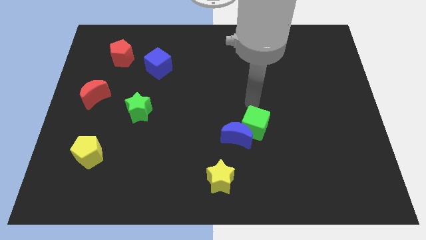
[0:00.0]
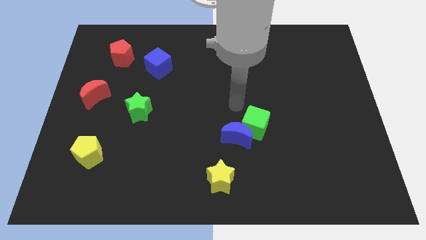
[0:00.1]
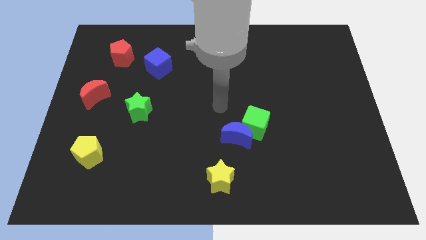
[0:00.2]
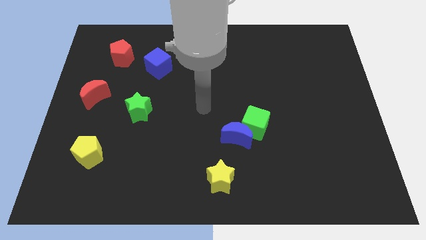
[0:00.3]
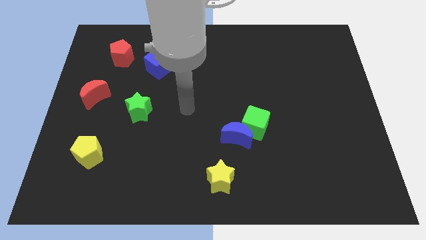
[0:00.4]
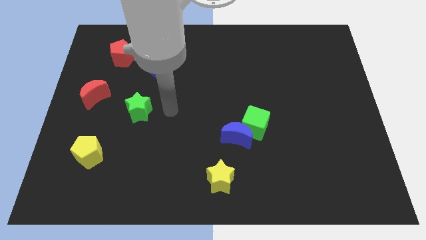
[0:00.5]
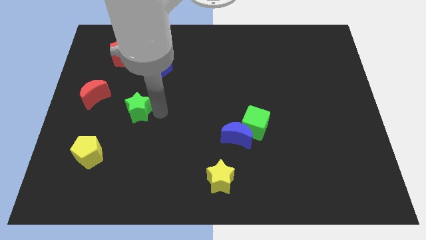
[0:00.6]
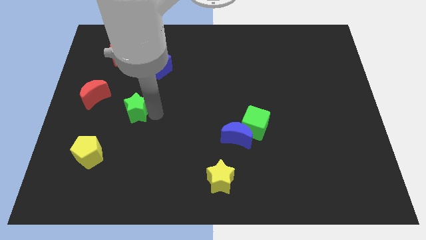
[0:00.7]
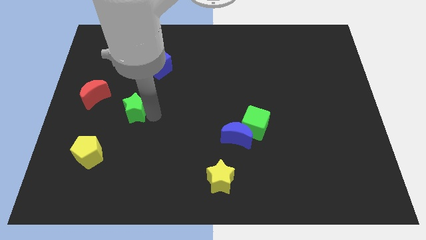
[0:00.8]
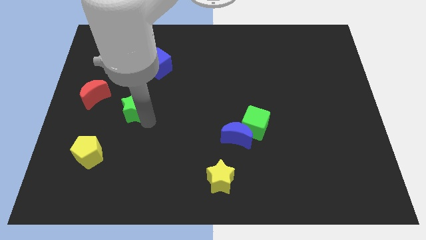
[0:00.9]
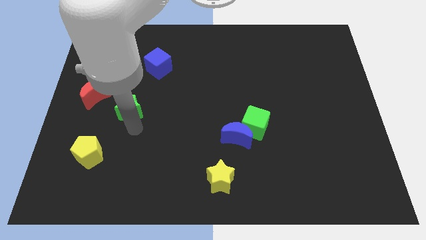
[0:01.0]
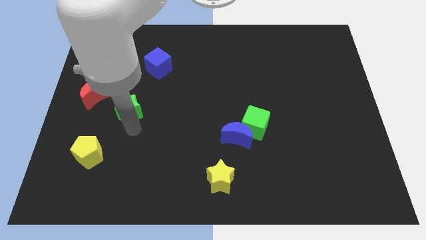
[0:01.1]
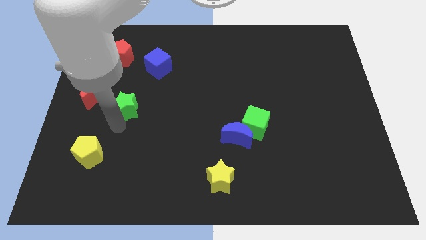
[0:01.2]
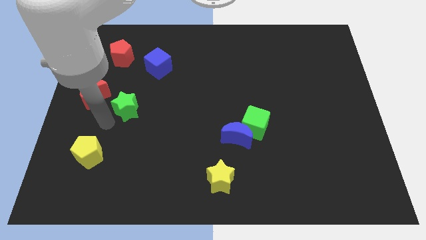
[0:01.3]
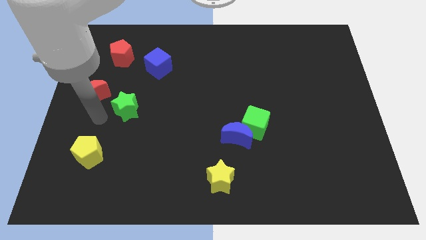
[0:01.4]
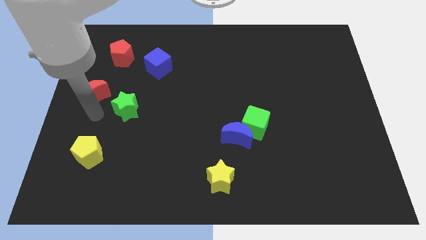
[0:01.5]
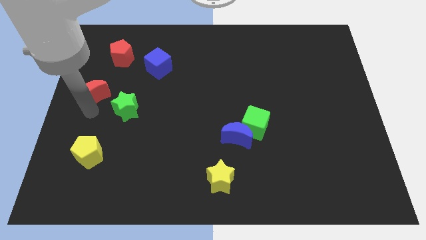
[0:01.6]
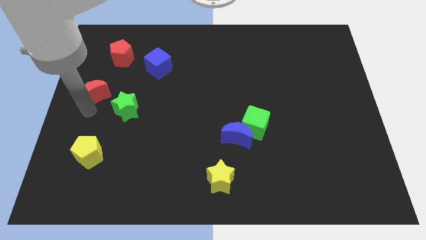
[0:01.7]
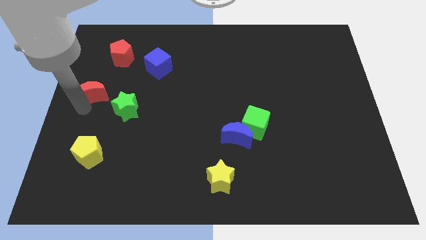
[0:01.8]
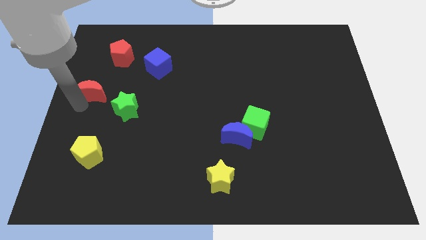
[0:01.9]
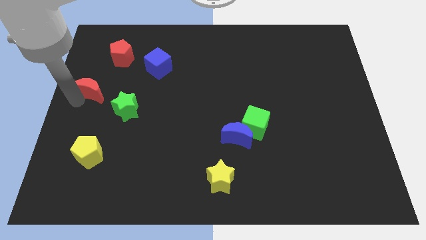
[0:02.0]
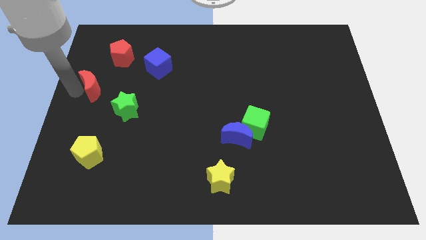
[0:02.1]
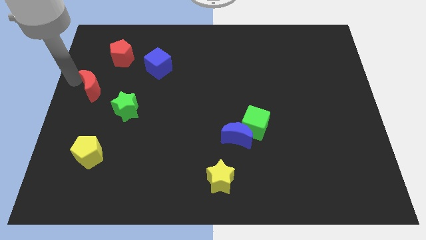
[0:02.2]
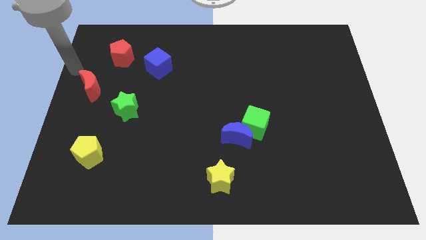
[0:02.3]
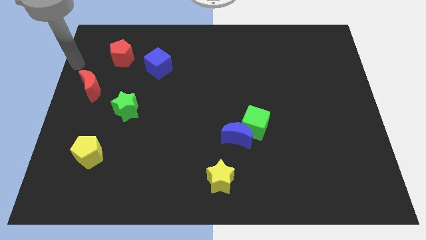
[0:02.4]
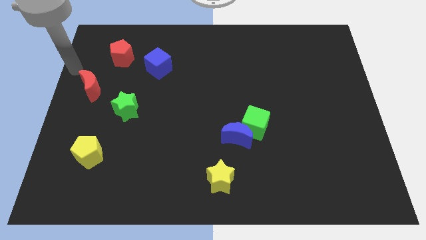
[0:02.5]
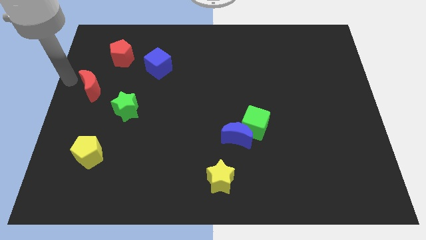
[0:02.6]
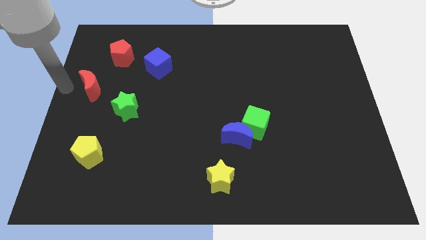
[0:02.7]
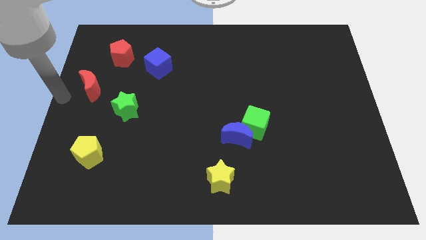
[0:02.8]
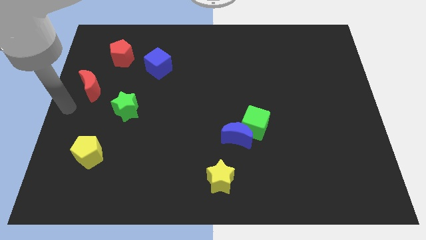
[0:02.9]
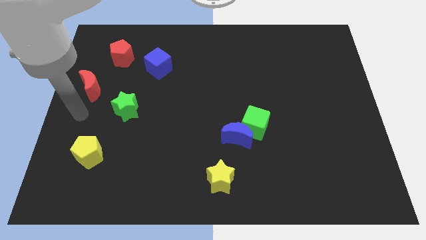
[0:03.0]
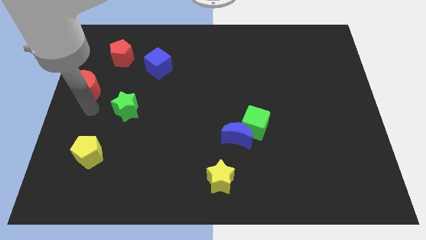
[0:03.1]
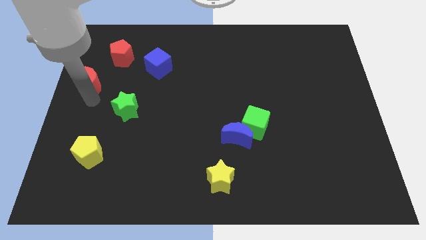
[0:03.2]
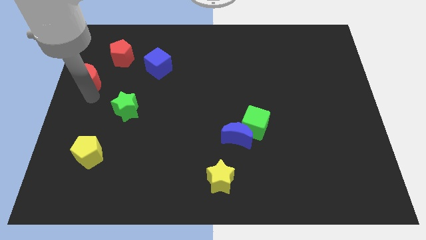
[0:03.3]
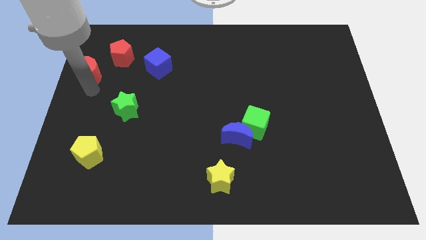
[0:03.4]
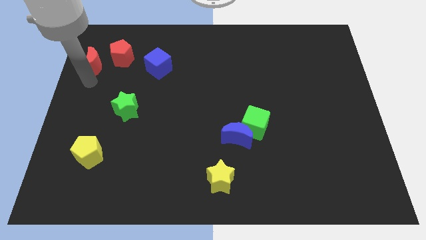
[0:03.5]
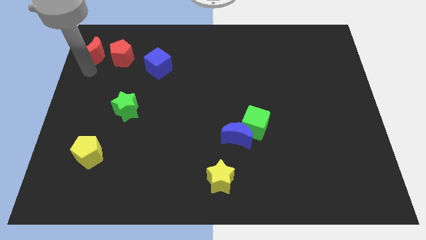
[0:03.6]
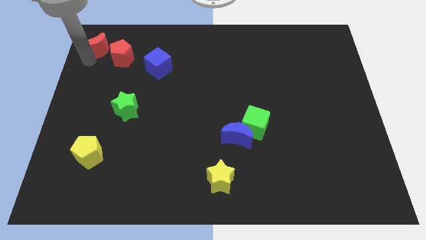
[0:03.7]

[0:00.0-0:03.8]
place red moon to the left of red pentagon

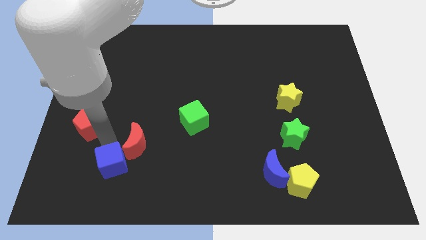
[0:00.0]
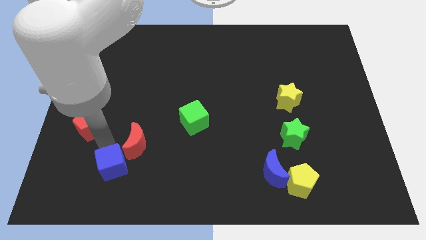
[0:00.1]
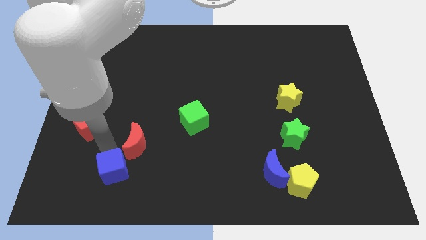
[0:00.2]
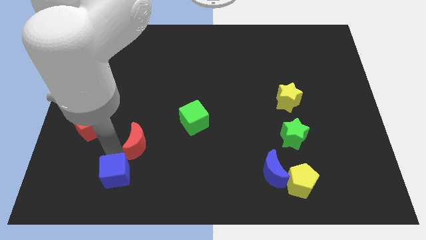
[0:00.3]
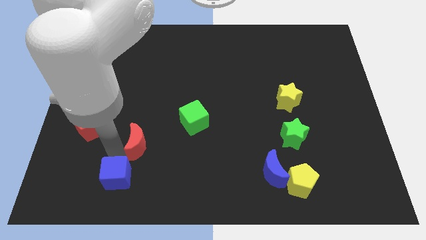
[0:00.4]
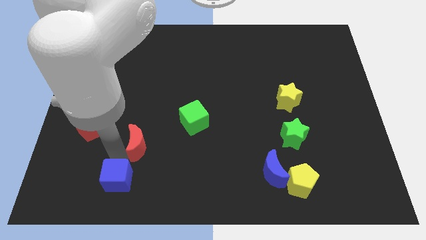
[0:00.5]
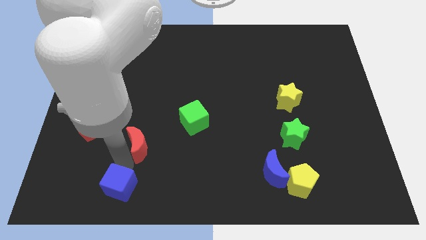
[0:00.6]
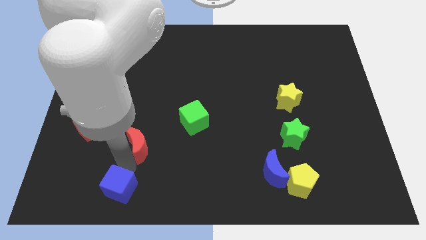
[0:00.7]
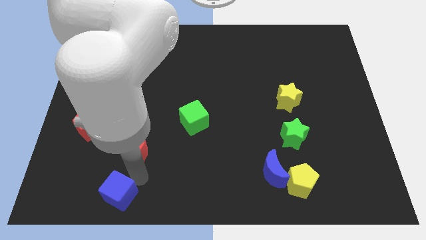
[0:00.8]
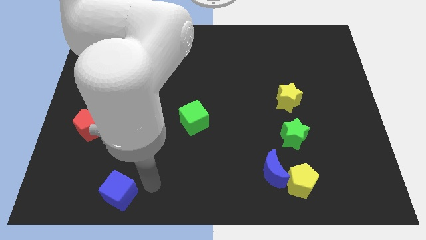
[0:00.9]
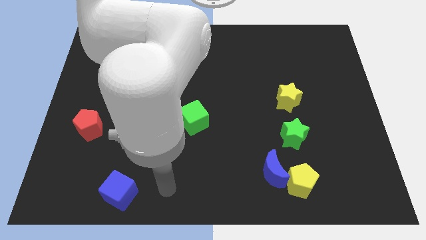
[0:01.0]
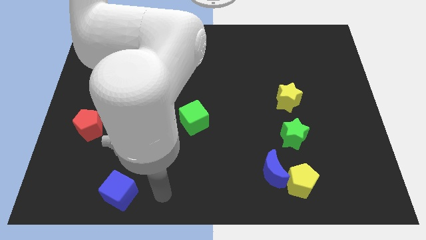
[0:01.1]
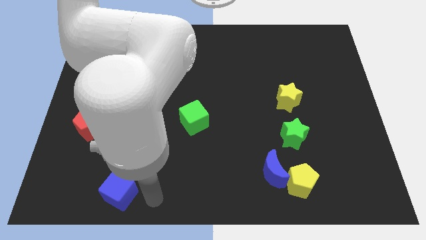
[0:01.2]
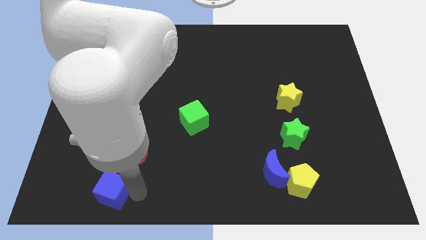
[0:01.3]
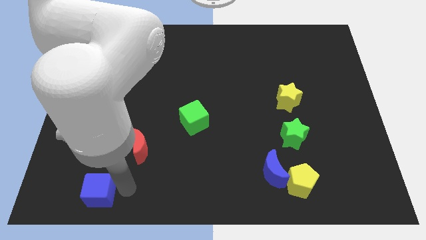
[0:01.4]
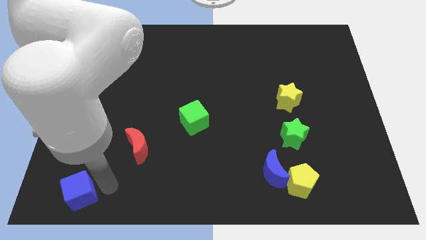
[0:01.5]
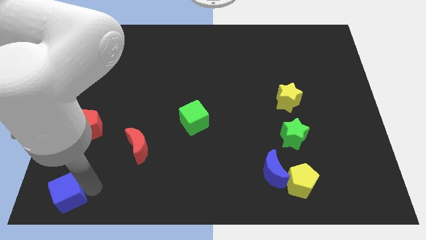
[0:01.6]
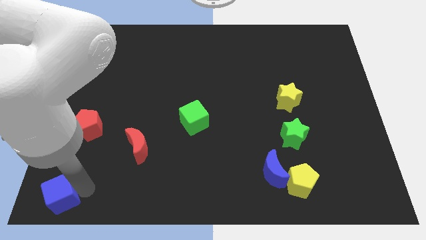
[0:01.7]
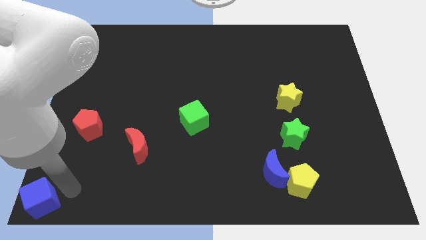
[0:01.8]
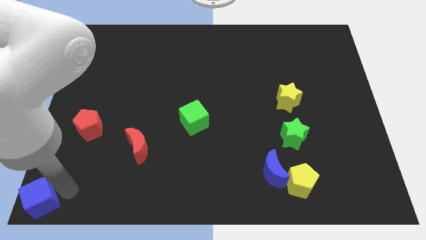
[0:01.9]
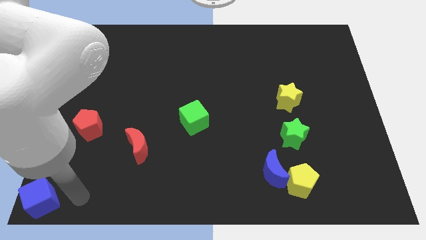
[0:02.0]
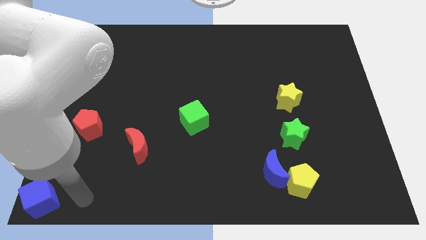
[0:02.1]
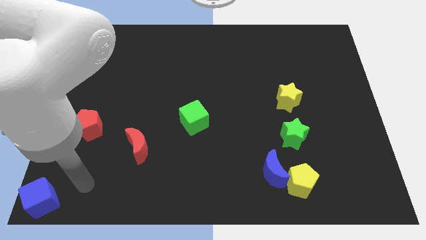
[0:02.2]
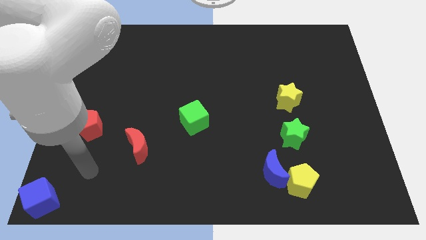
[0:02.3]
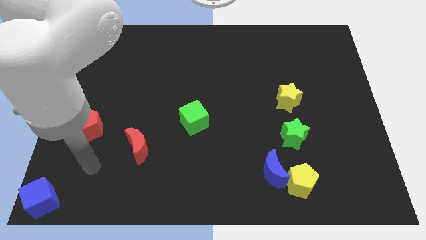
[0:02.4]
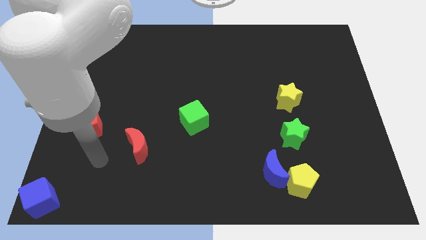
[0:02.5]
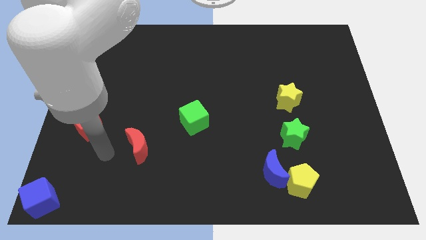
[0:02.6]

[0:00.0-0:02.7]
place the blue cube at the bottom left corner of the board

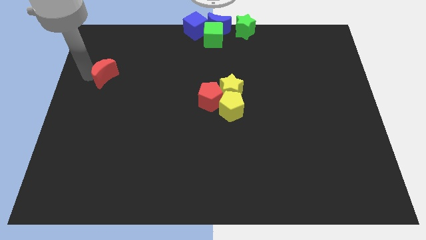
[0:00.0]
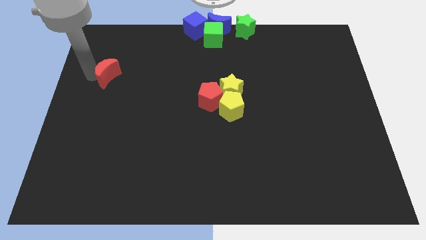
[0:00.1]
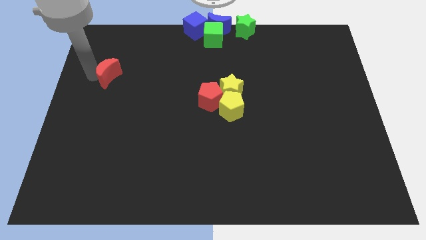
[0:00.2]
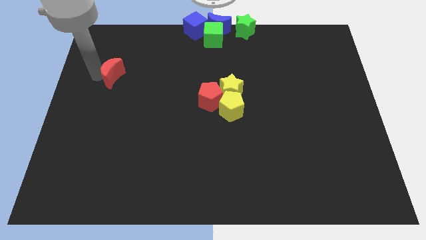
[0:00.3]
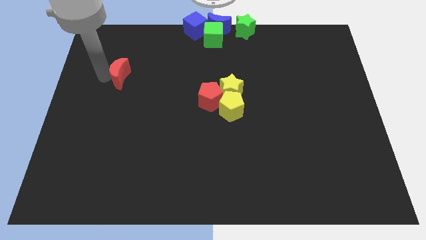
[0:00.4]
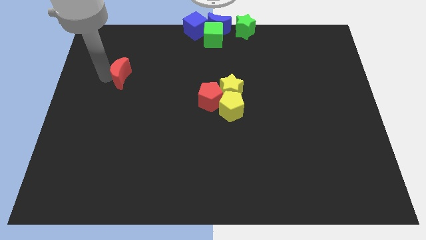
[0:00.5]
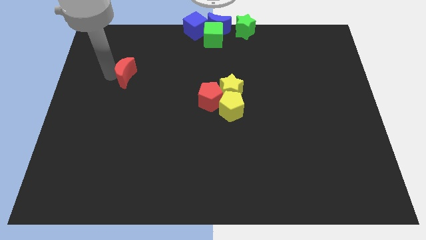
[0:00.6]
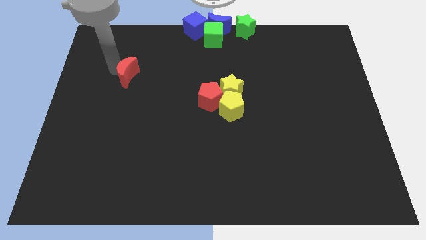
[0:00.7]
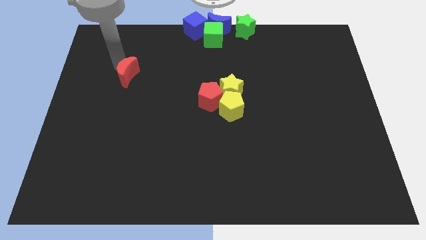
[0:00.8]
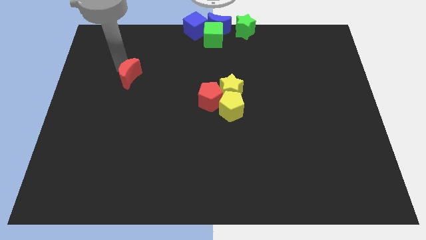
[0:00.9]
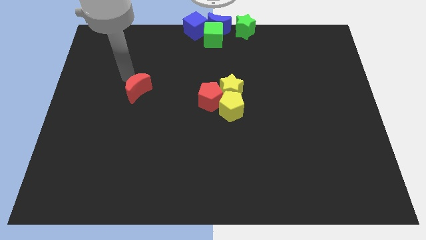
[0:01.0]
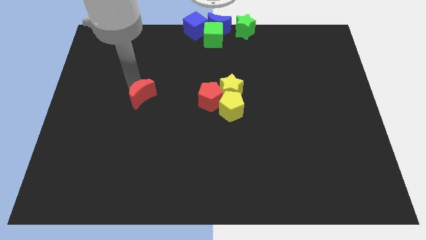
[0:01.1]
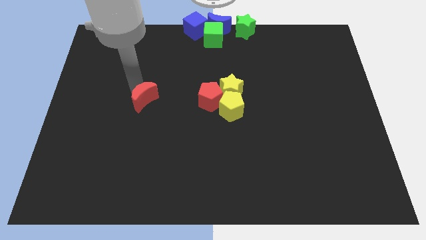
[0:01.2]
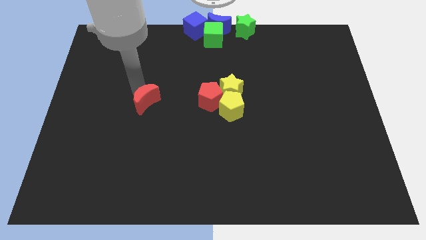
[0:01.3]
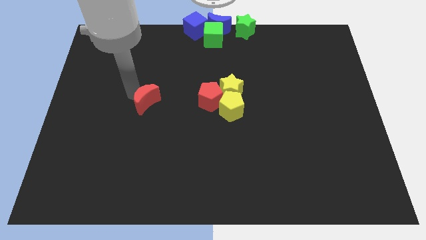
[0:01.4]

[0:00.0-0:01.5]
push the red moon towards center

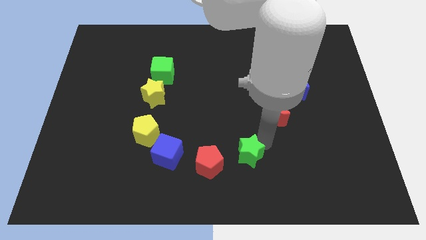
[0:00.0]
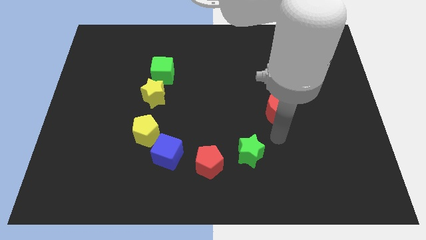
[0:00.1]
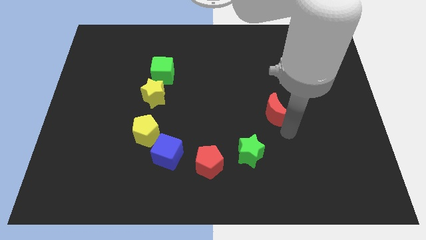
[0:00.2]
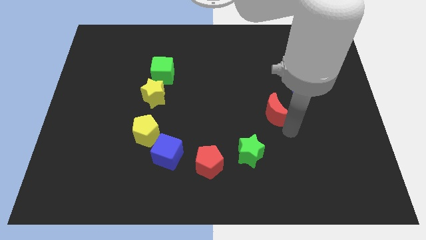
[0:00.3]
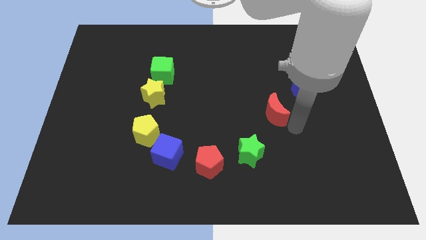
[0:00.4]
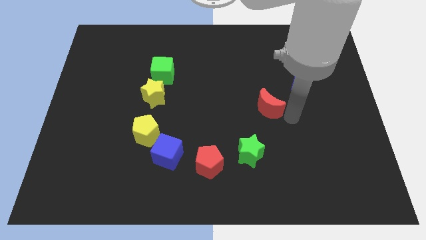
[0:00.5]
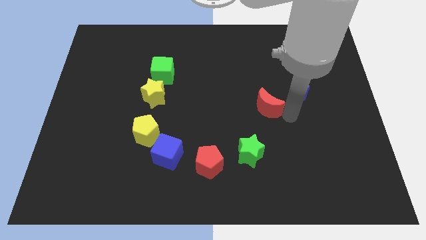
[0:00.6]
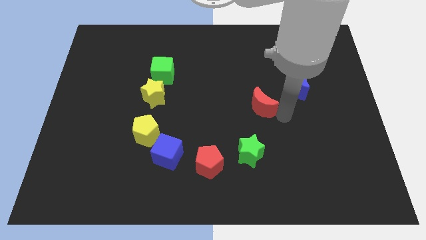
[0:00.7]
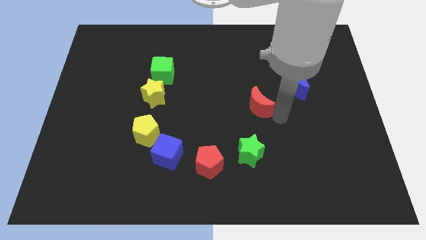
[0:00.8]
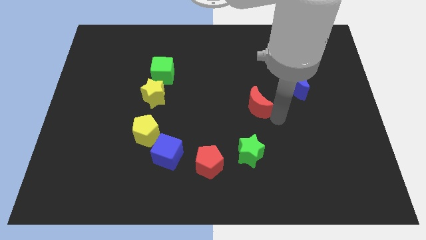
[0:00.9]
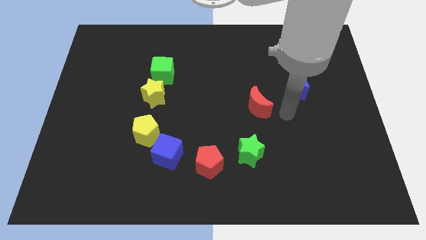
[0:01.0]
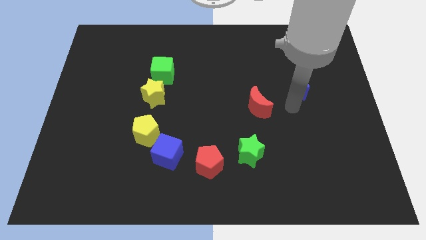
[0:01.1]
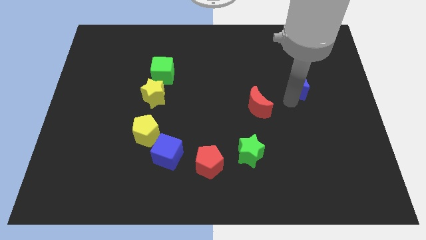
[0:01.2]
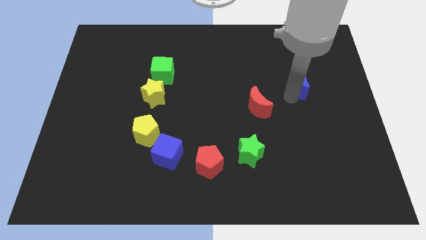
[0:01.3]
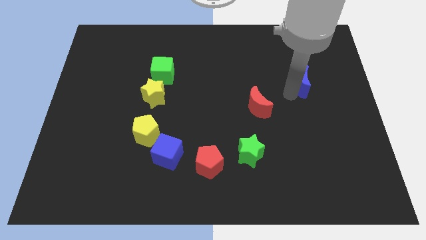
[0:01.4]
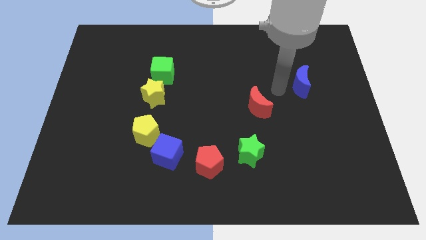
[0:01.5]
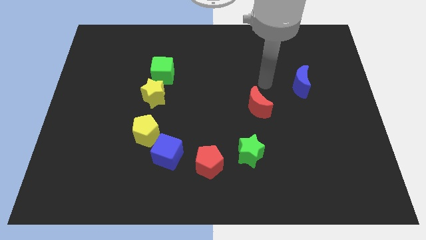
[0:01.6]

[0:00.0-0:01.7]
place the red crescent above the green star
